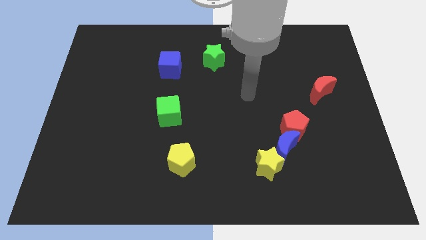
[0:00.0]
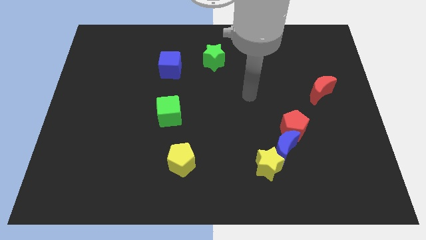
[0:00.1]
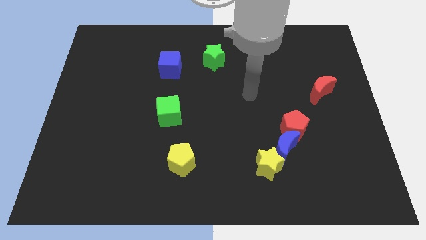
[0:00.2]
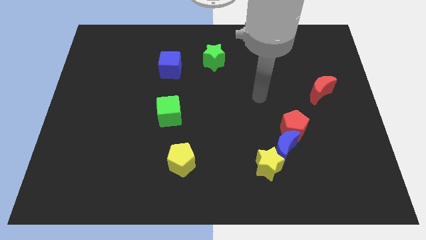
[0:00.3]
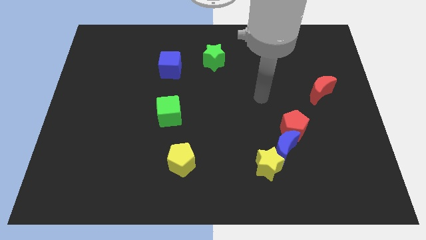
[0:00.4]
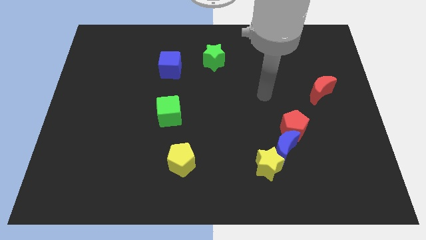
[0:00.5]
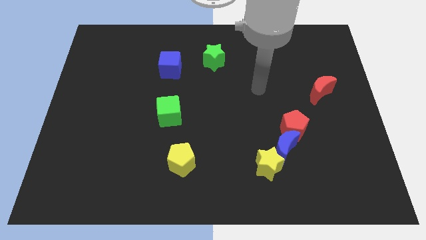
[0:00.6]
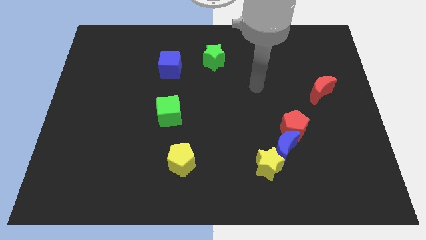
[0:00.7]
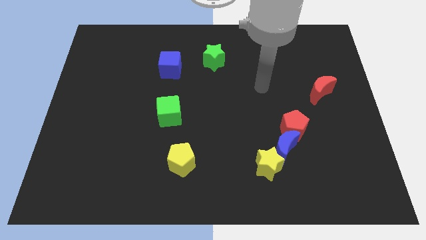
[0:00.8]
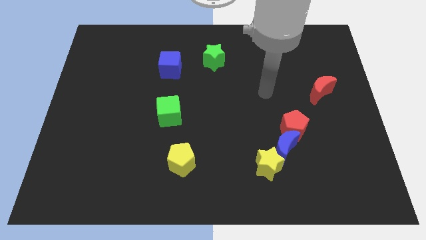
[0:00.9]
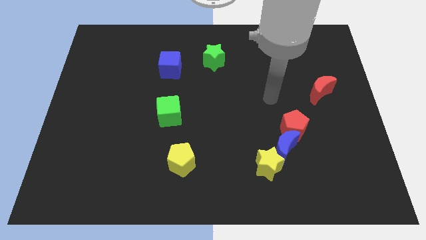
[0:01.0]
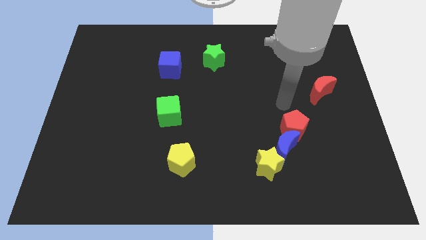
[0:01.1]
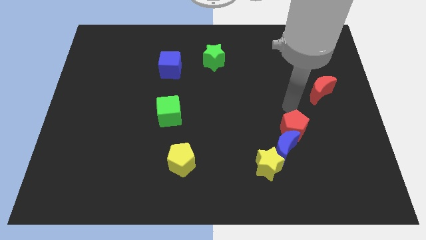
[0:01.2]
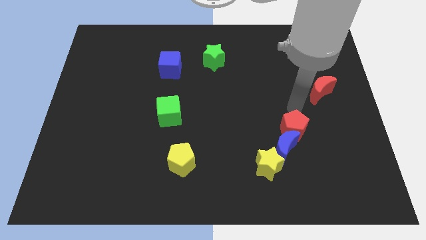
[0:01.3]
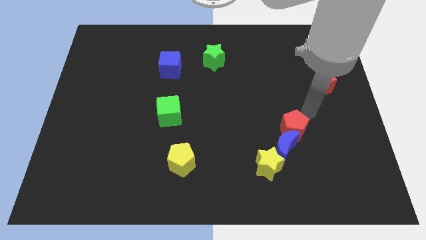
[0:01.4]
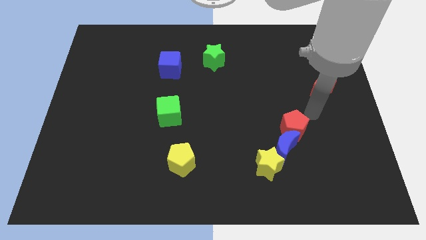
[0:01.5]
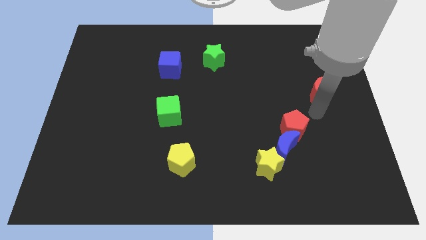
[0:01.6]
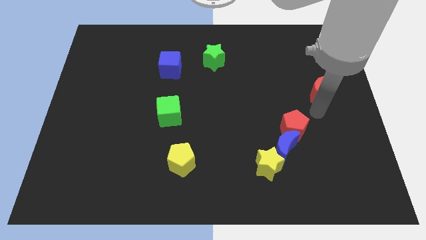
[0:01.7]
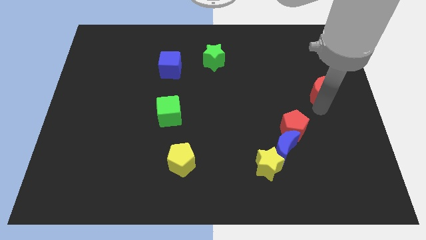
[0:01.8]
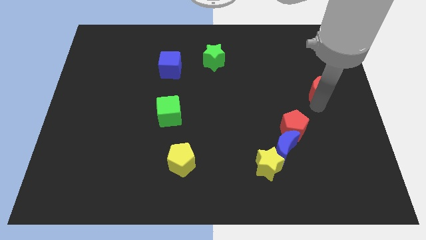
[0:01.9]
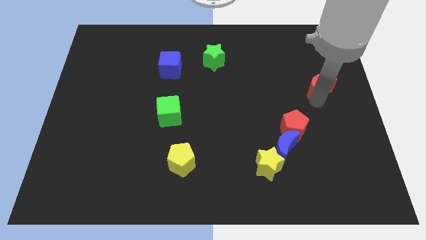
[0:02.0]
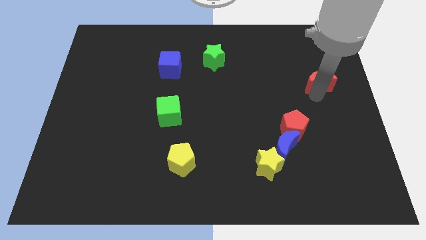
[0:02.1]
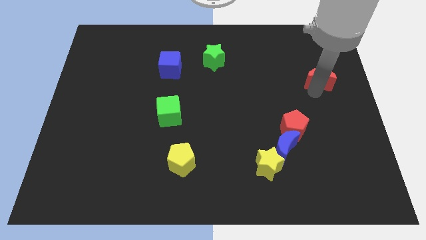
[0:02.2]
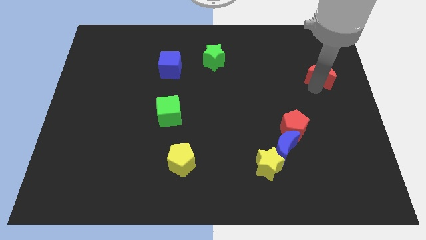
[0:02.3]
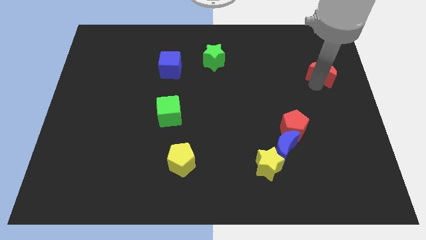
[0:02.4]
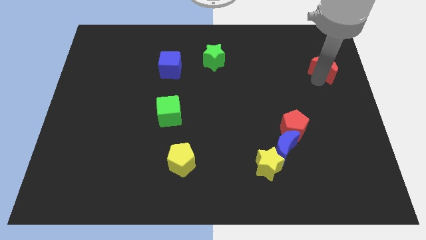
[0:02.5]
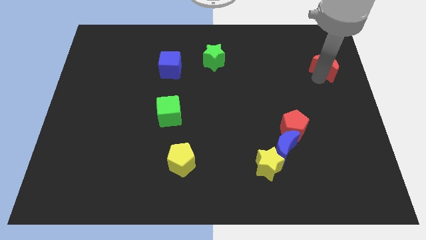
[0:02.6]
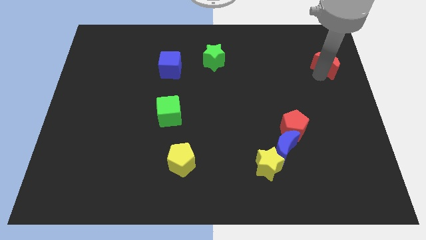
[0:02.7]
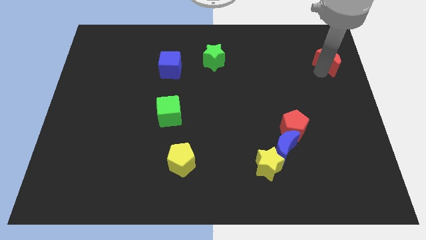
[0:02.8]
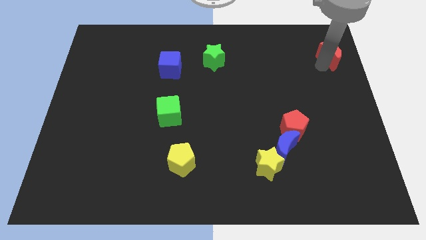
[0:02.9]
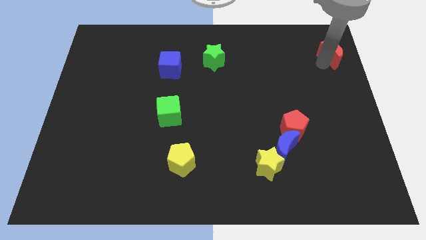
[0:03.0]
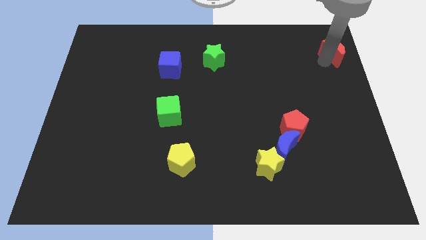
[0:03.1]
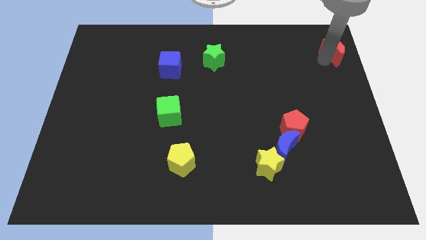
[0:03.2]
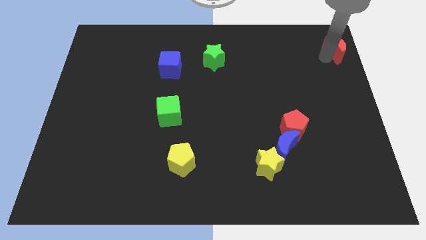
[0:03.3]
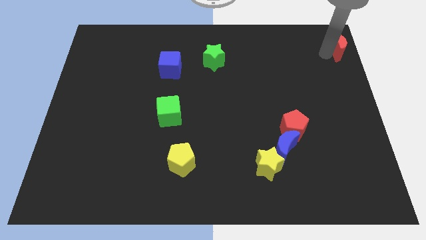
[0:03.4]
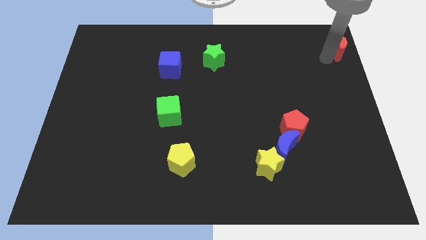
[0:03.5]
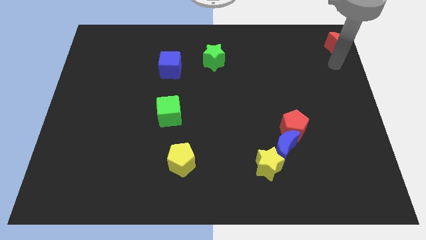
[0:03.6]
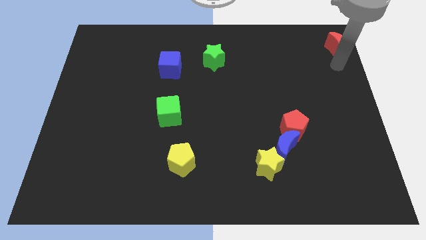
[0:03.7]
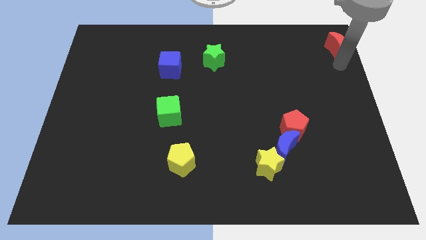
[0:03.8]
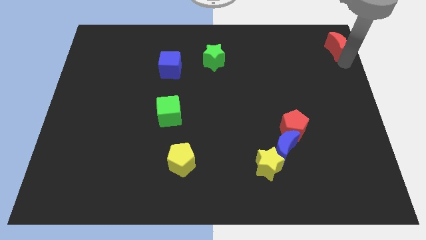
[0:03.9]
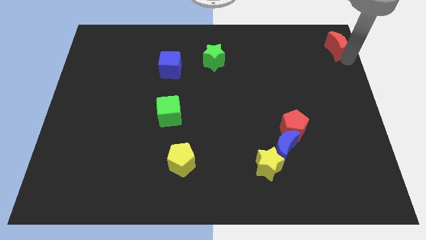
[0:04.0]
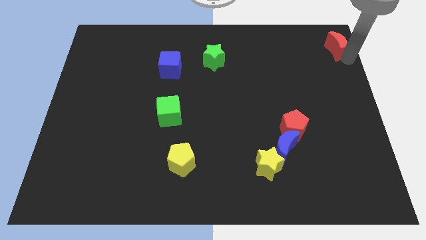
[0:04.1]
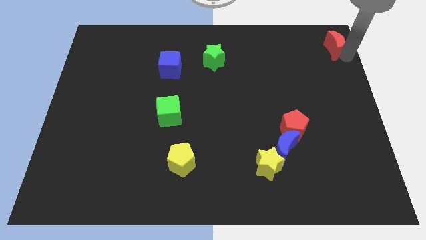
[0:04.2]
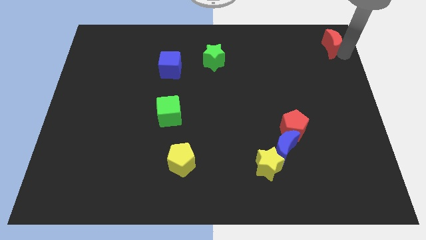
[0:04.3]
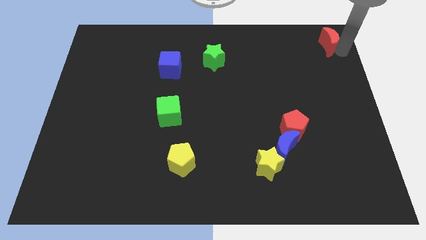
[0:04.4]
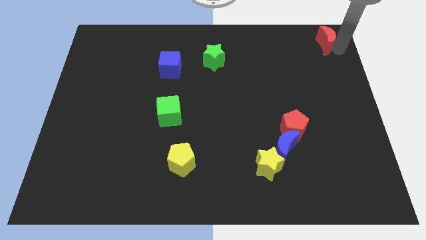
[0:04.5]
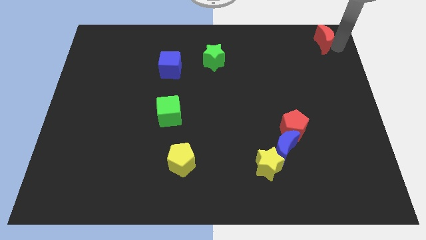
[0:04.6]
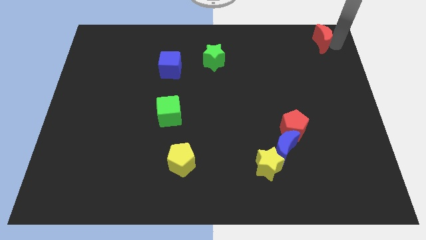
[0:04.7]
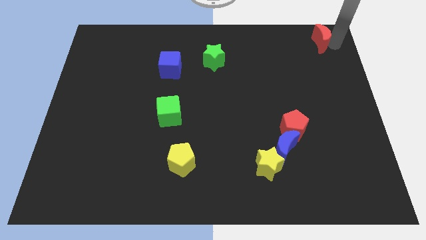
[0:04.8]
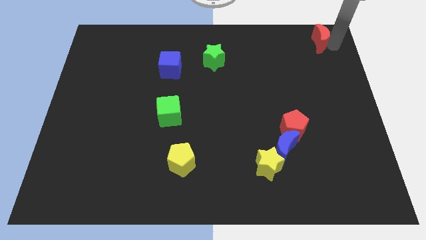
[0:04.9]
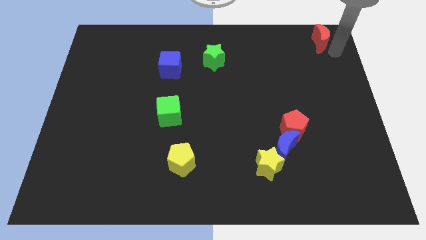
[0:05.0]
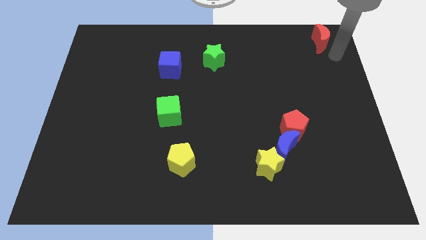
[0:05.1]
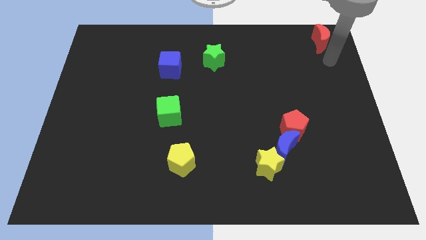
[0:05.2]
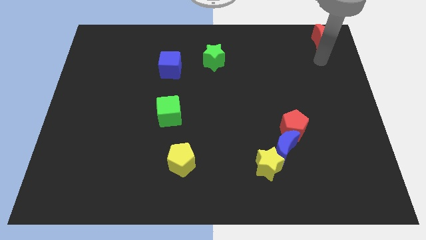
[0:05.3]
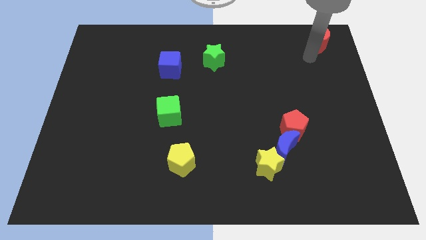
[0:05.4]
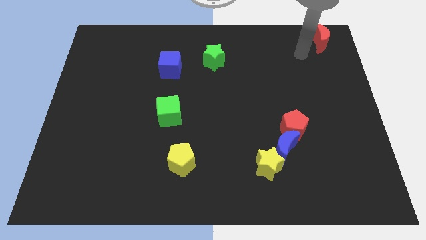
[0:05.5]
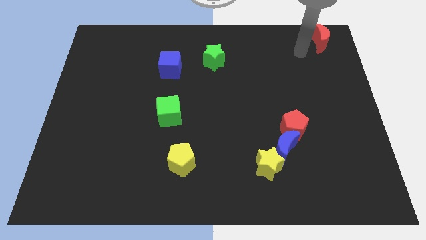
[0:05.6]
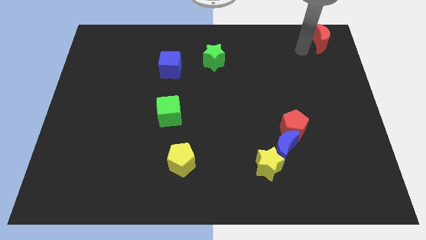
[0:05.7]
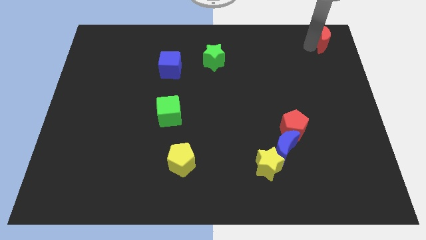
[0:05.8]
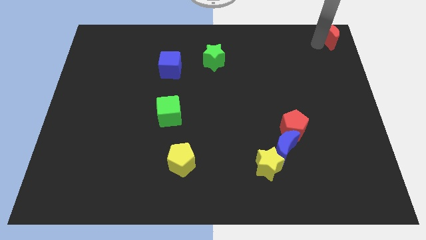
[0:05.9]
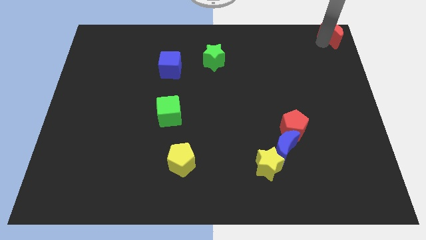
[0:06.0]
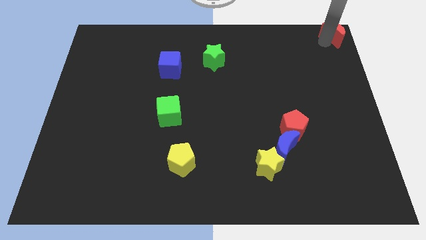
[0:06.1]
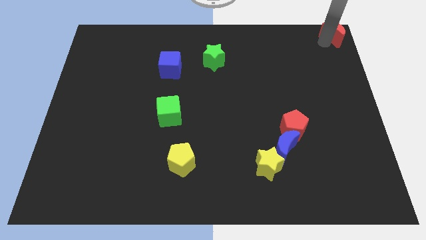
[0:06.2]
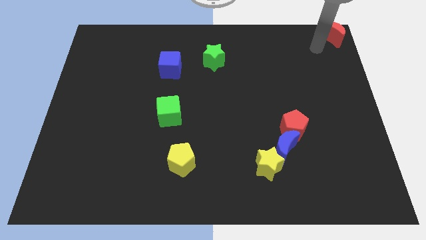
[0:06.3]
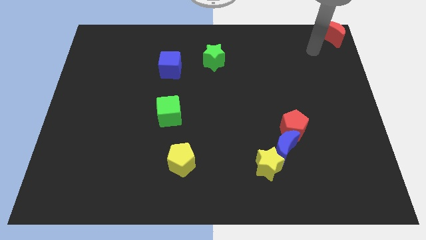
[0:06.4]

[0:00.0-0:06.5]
move the red crescent to the top right corner of the board

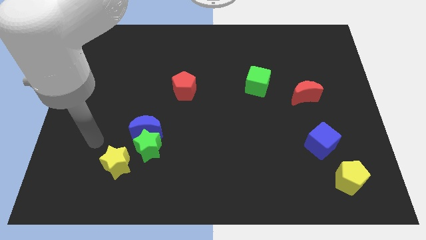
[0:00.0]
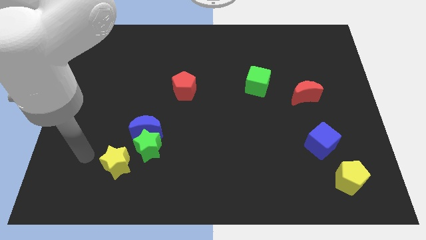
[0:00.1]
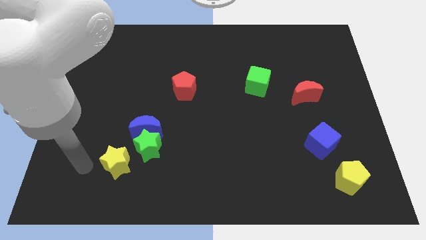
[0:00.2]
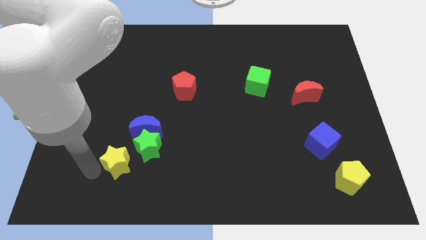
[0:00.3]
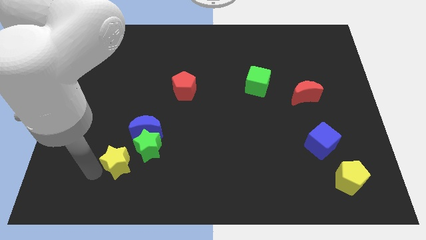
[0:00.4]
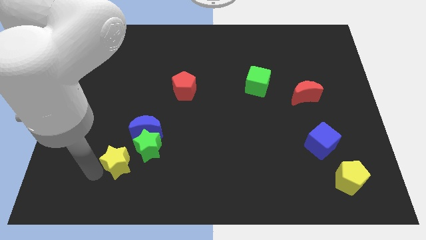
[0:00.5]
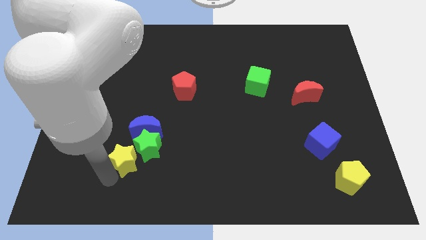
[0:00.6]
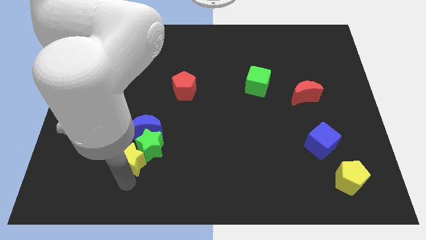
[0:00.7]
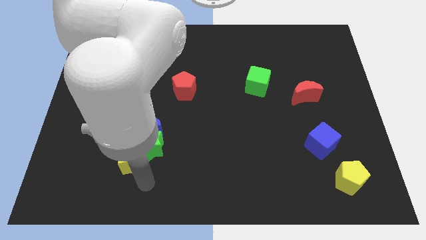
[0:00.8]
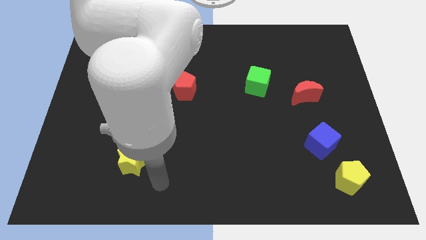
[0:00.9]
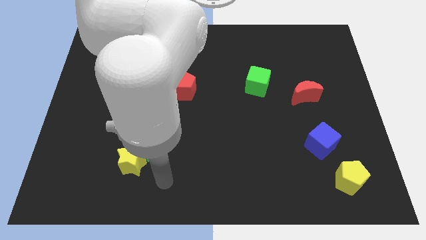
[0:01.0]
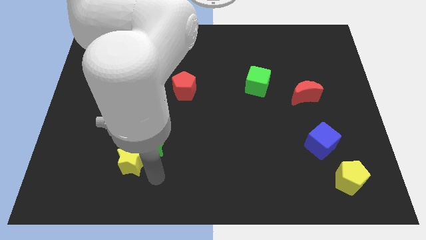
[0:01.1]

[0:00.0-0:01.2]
slightly push the stars and blue moon towards the top side of the board

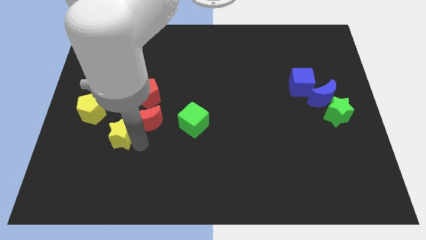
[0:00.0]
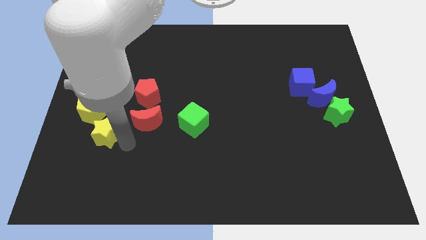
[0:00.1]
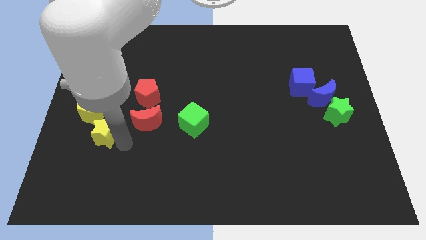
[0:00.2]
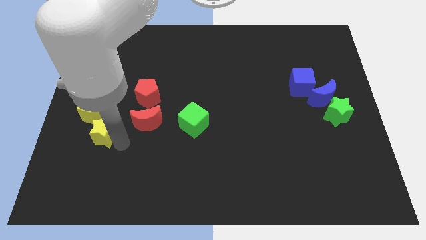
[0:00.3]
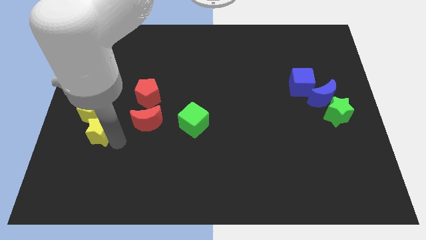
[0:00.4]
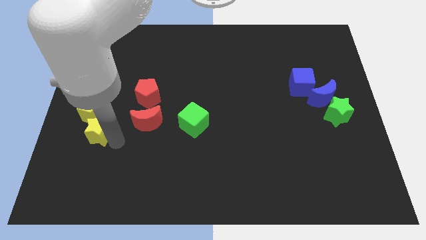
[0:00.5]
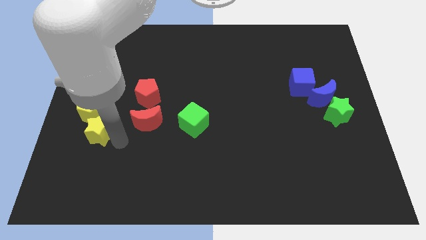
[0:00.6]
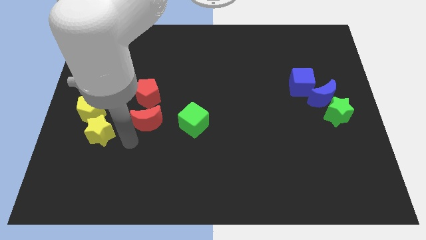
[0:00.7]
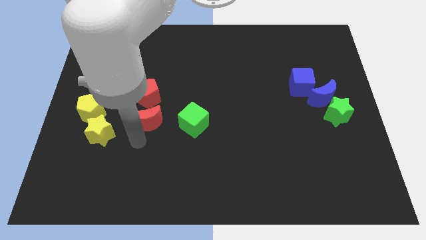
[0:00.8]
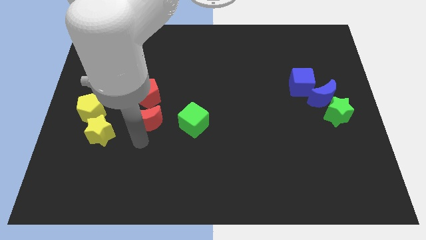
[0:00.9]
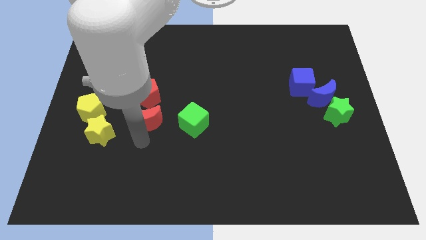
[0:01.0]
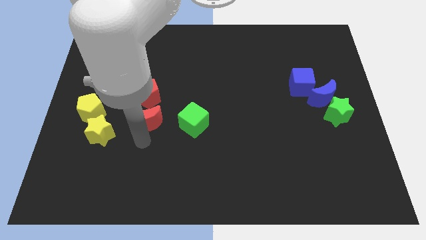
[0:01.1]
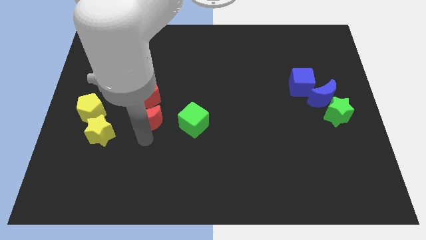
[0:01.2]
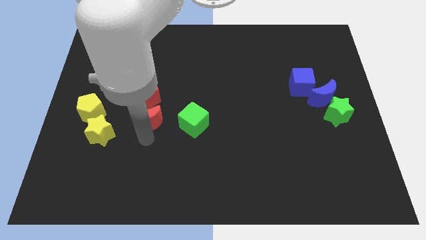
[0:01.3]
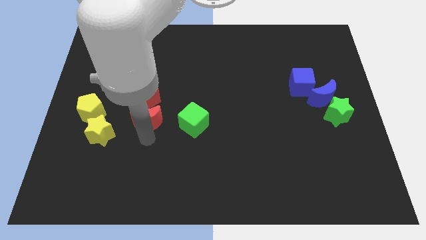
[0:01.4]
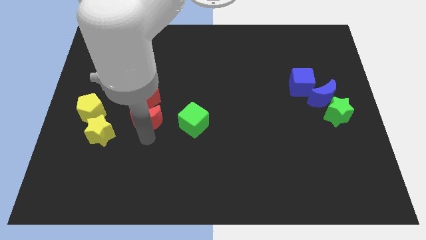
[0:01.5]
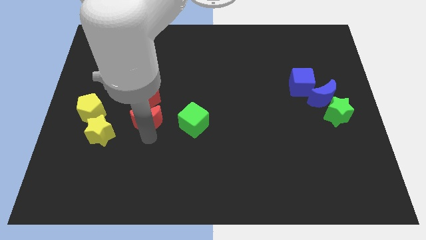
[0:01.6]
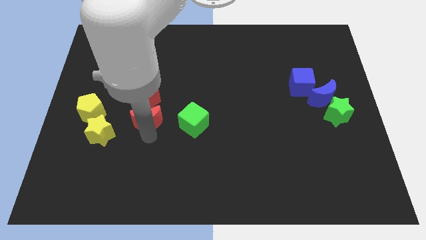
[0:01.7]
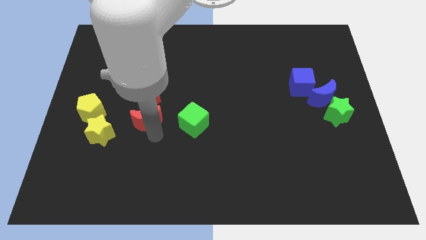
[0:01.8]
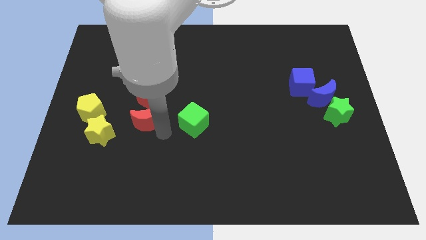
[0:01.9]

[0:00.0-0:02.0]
place the yellow star down to the yellow pentagon
